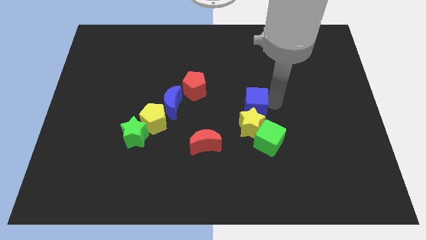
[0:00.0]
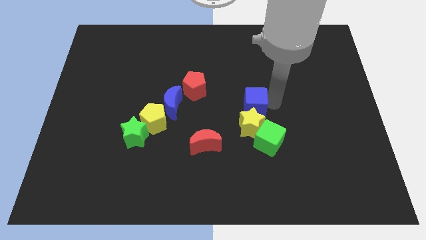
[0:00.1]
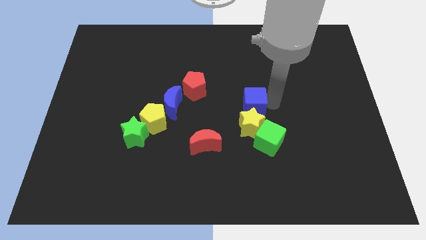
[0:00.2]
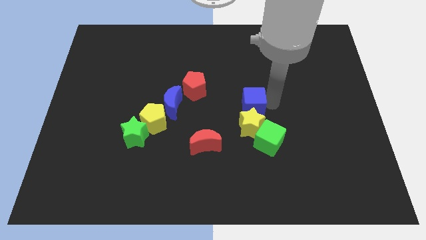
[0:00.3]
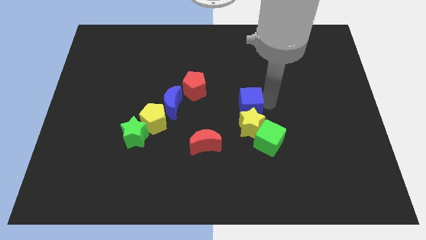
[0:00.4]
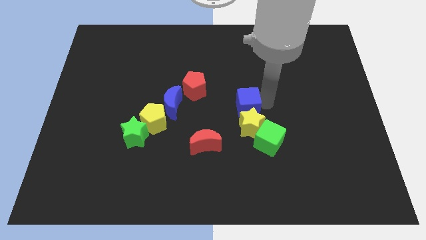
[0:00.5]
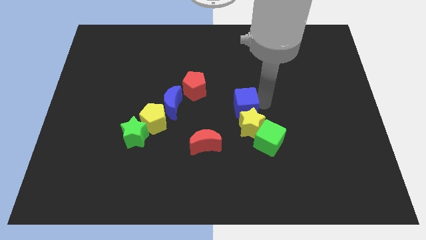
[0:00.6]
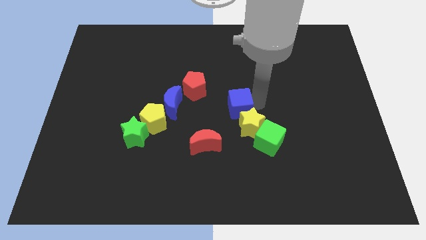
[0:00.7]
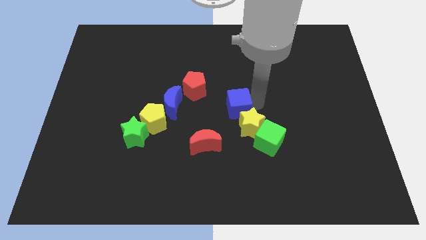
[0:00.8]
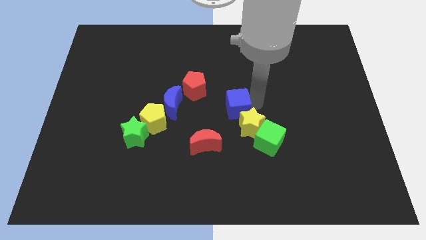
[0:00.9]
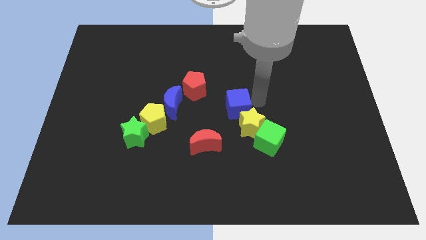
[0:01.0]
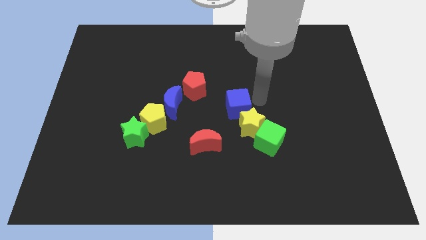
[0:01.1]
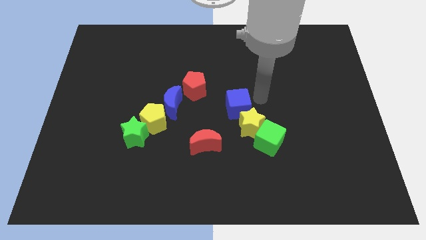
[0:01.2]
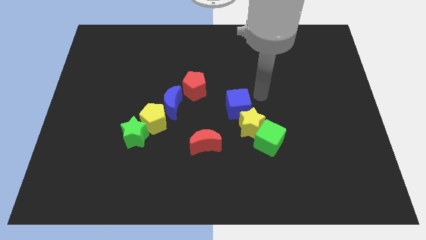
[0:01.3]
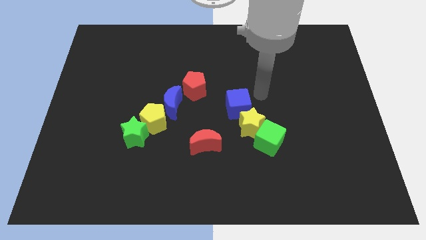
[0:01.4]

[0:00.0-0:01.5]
put the blue cube in between red pentagon and yellow star

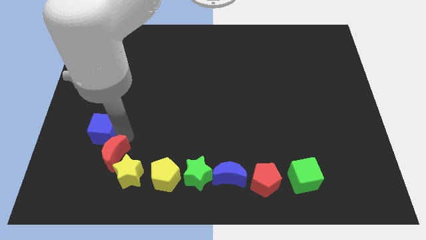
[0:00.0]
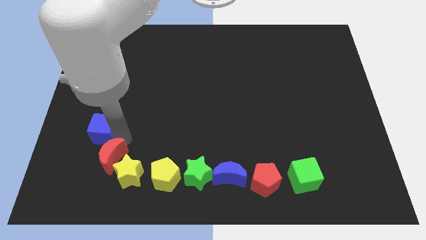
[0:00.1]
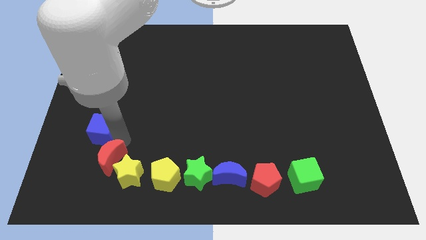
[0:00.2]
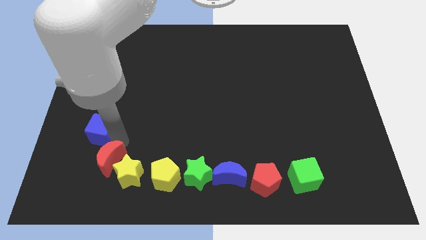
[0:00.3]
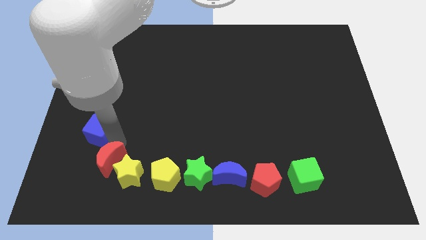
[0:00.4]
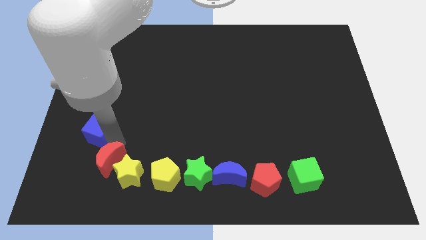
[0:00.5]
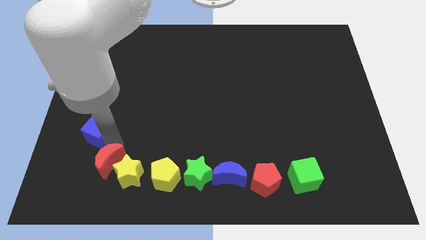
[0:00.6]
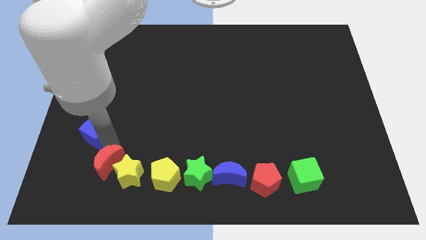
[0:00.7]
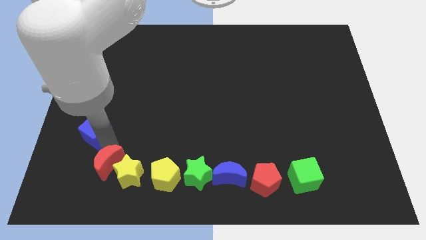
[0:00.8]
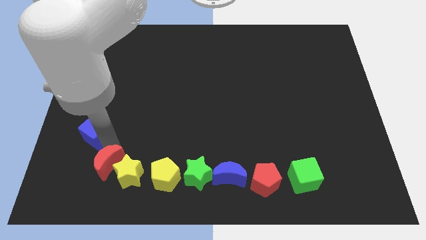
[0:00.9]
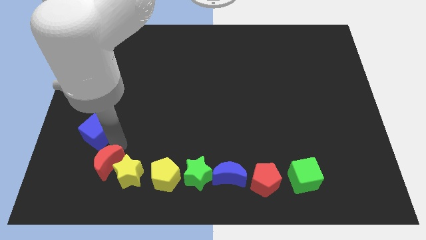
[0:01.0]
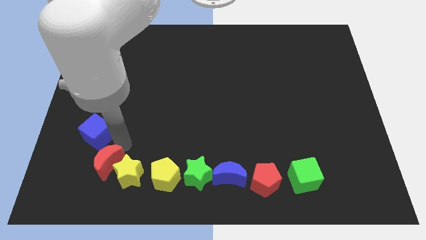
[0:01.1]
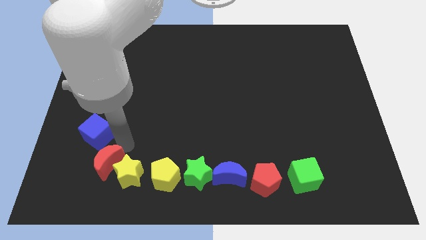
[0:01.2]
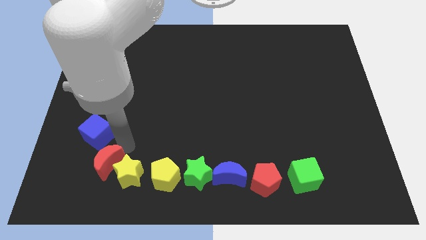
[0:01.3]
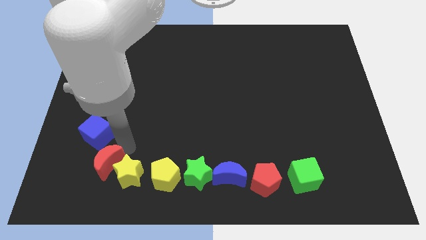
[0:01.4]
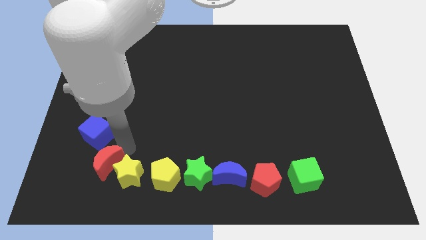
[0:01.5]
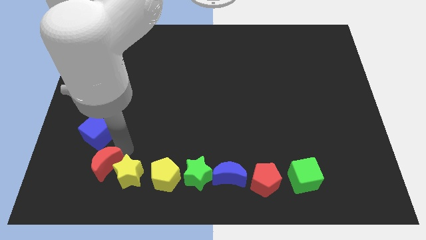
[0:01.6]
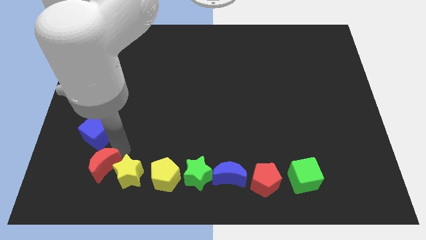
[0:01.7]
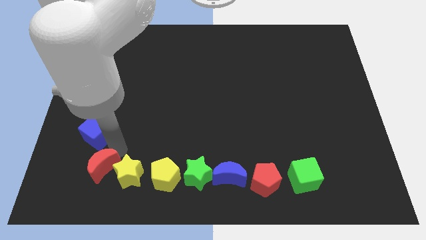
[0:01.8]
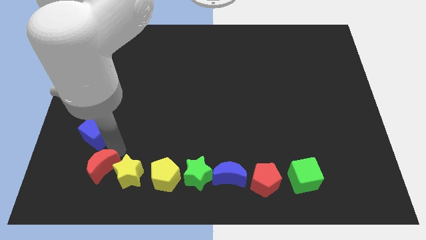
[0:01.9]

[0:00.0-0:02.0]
put the red moon left at the yellow star

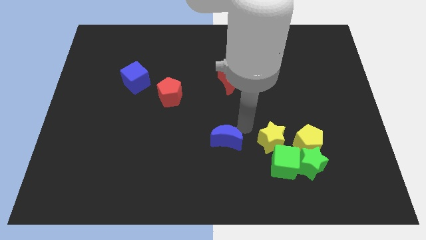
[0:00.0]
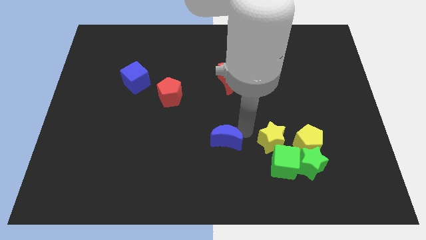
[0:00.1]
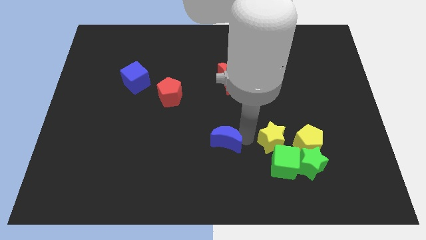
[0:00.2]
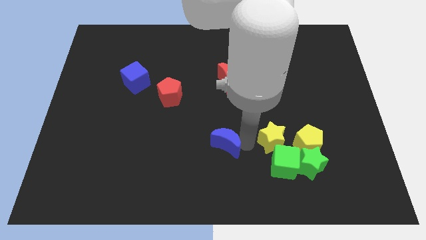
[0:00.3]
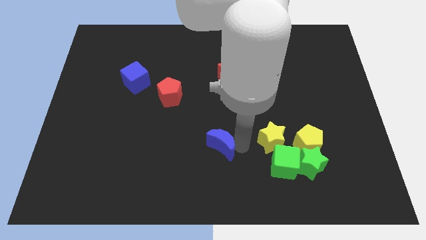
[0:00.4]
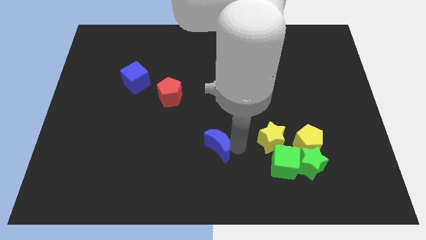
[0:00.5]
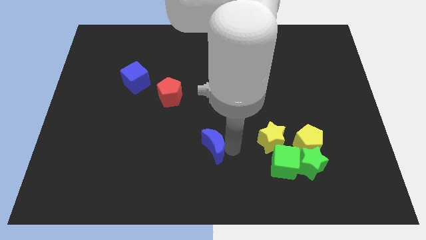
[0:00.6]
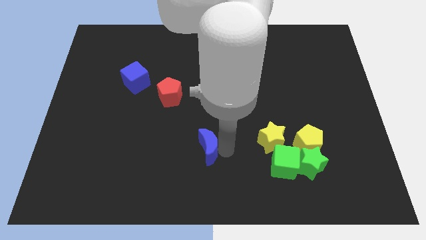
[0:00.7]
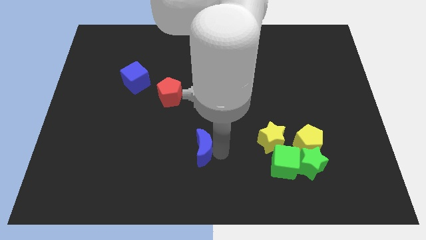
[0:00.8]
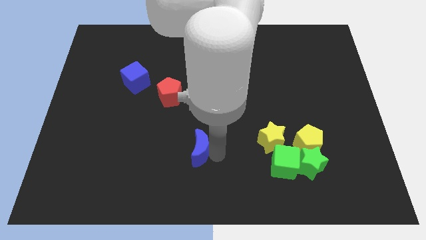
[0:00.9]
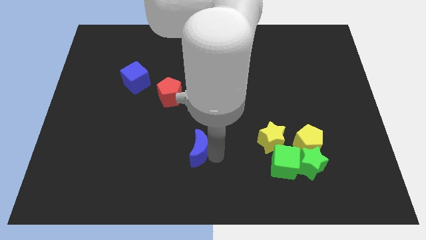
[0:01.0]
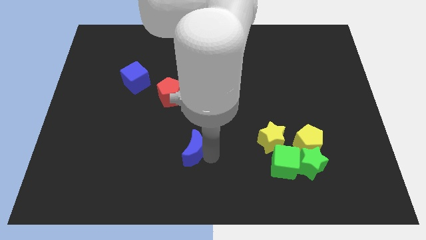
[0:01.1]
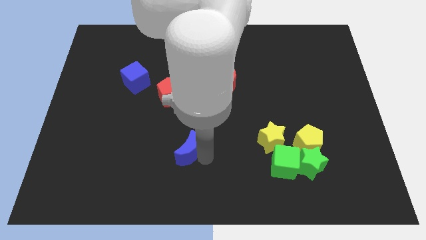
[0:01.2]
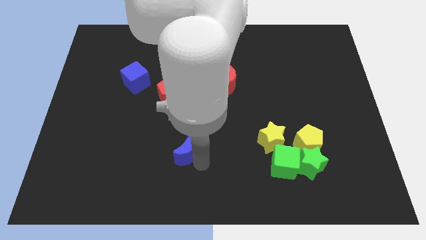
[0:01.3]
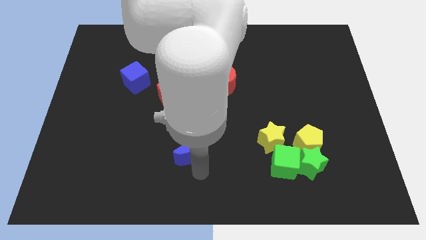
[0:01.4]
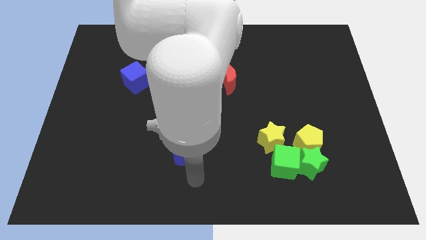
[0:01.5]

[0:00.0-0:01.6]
move the blue crescent slightly to the left

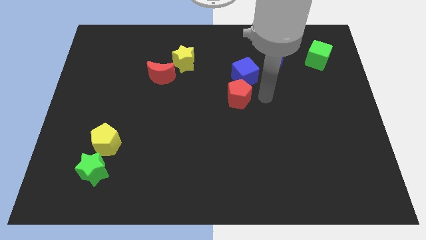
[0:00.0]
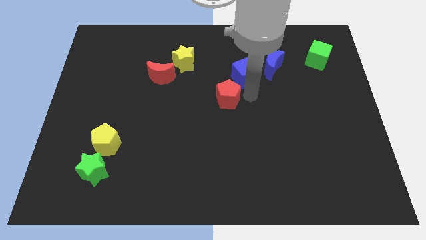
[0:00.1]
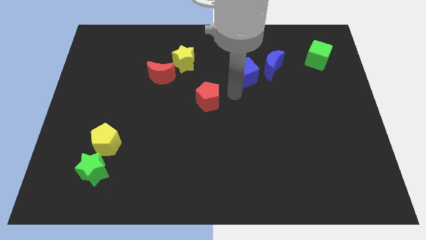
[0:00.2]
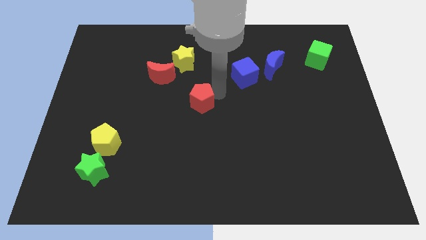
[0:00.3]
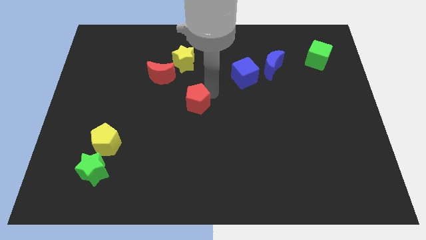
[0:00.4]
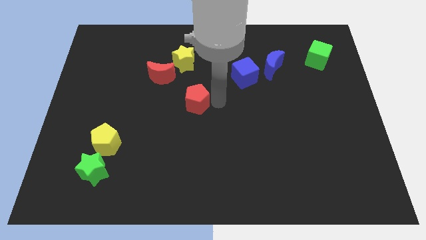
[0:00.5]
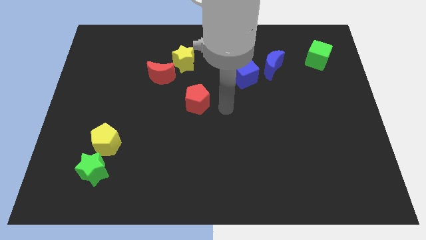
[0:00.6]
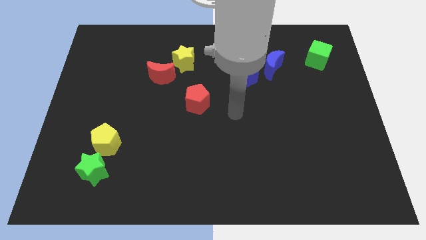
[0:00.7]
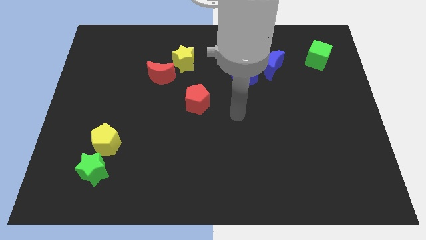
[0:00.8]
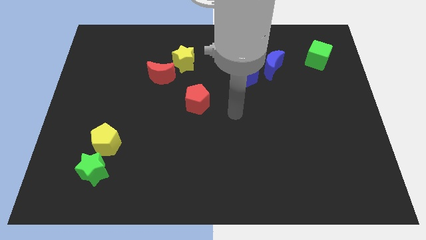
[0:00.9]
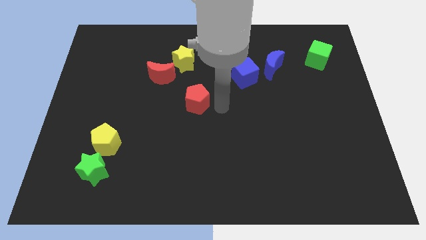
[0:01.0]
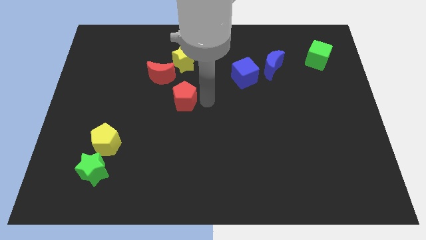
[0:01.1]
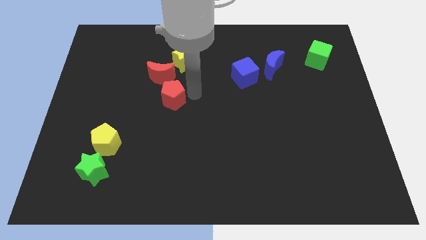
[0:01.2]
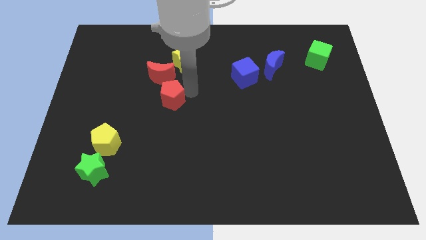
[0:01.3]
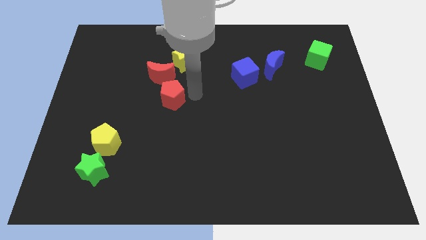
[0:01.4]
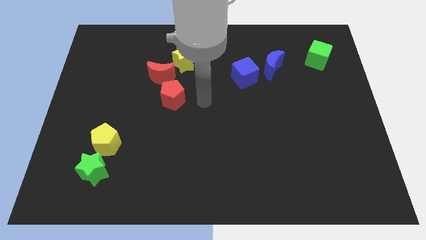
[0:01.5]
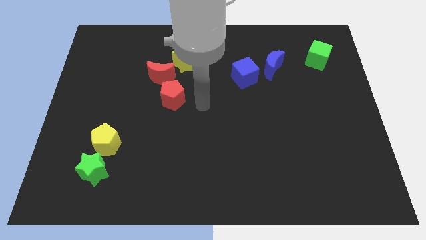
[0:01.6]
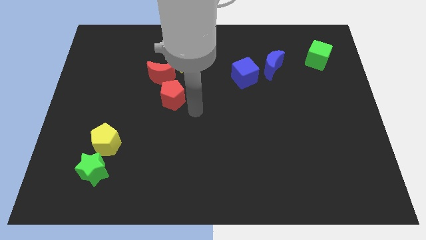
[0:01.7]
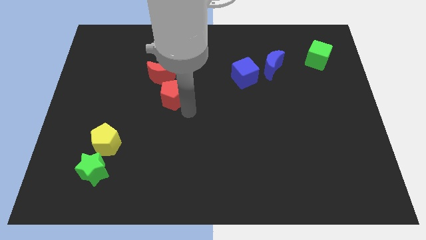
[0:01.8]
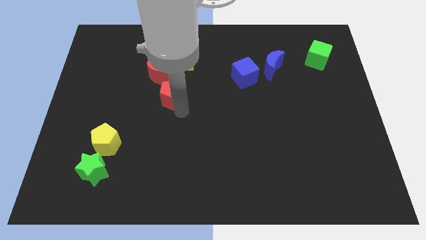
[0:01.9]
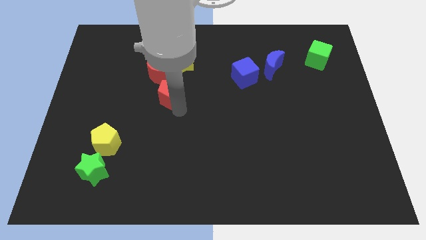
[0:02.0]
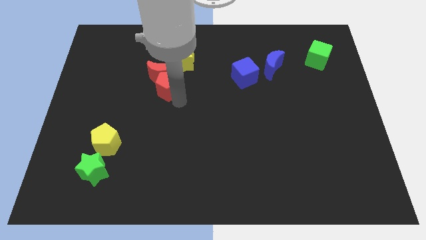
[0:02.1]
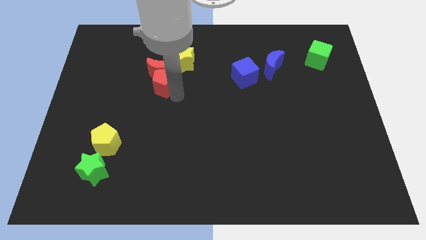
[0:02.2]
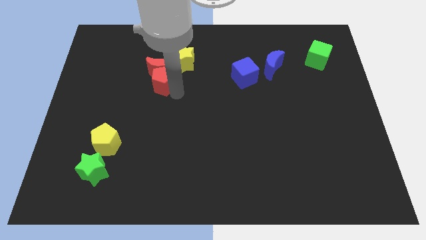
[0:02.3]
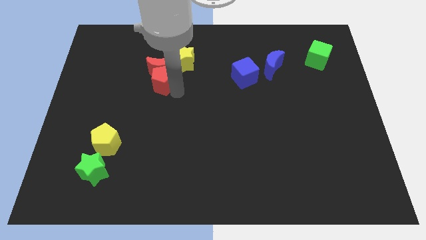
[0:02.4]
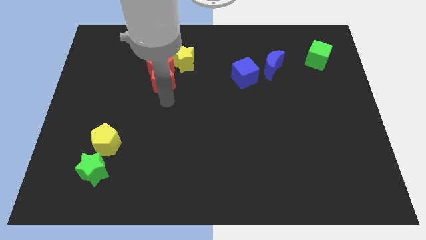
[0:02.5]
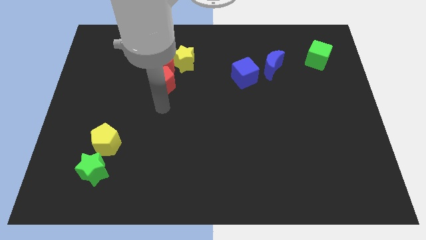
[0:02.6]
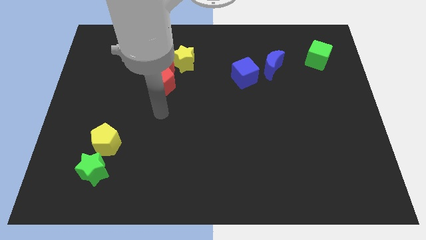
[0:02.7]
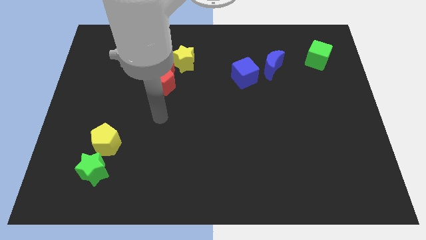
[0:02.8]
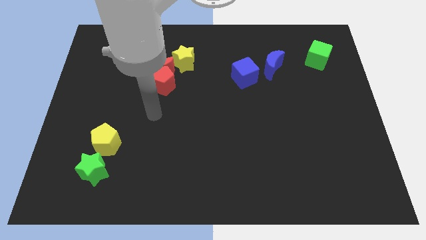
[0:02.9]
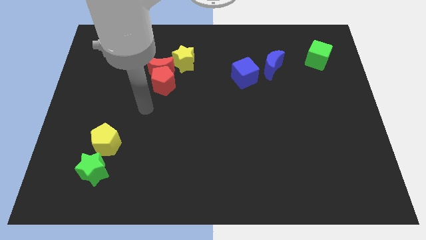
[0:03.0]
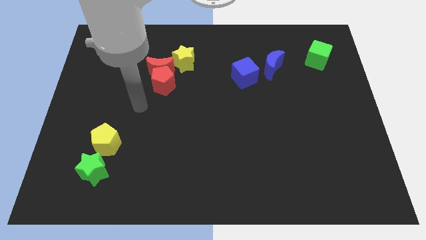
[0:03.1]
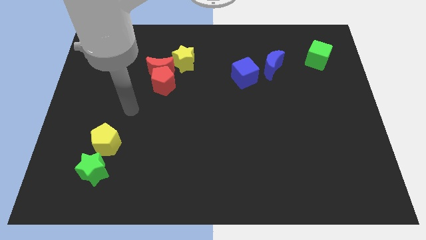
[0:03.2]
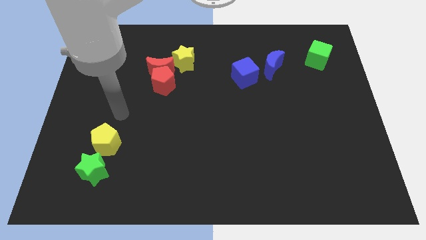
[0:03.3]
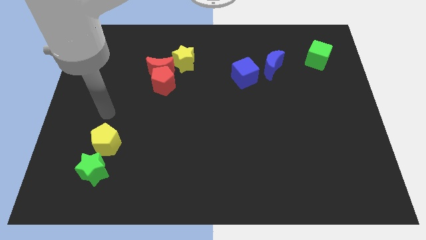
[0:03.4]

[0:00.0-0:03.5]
place the red pentagon below the red crescent

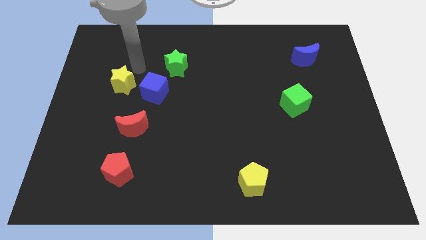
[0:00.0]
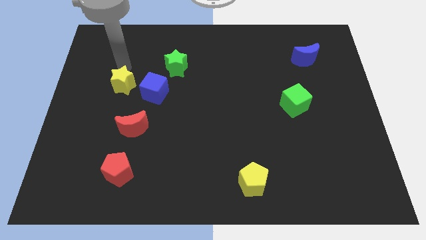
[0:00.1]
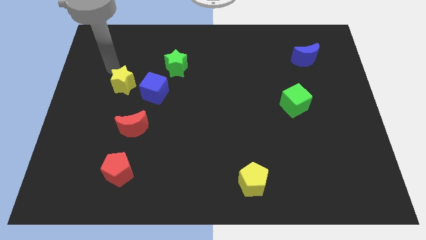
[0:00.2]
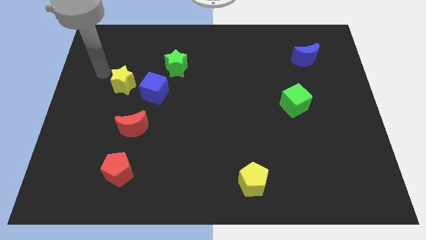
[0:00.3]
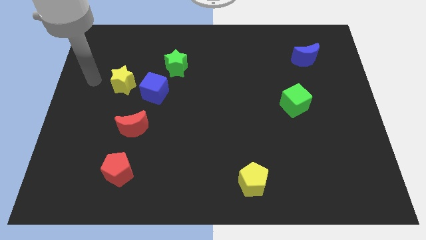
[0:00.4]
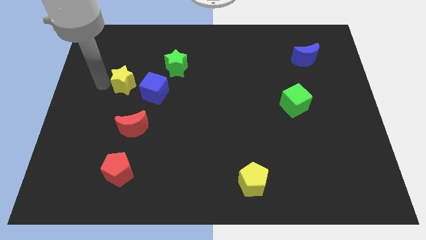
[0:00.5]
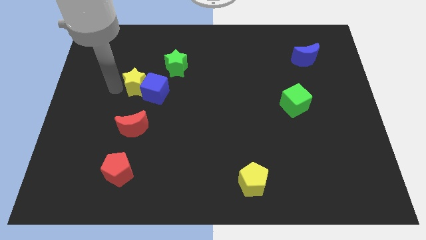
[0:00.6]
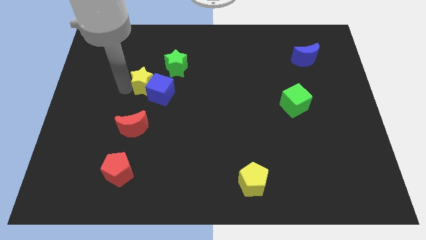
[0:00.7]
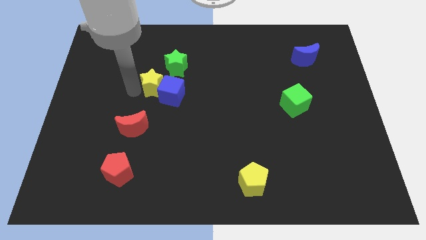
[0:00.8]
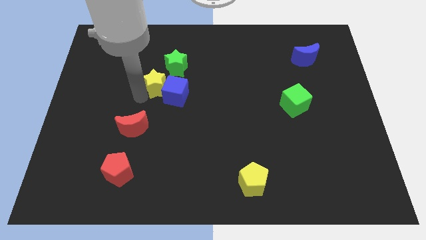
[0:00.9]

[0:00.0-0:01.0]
move yellow star into the blue cube
